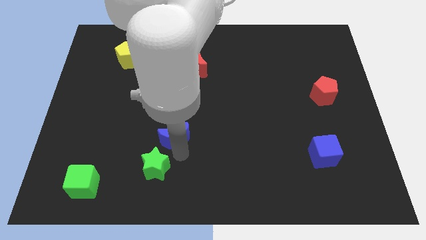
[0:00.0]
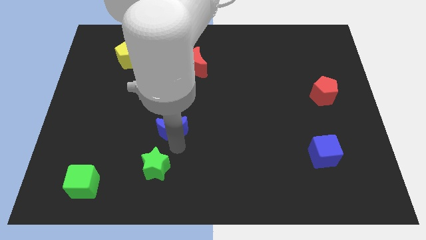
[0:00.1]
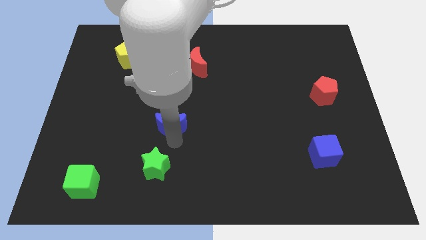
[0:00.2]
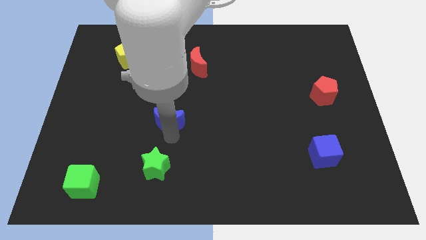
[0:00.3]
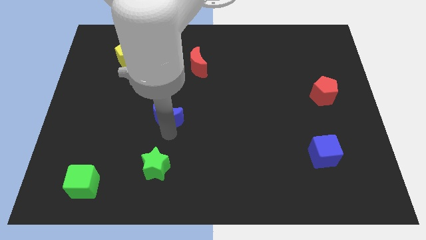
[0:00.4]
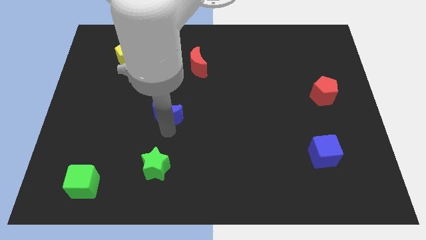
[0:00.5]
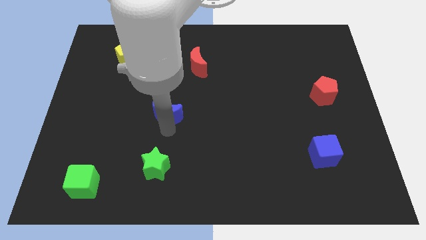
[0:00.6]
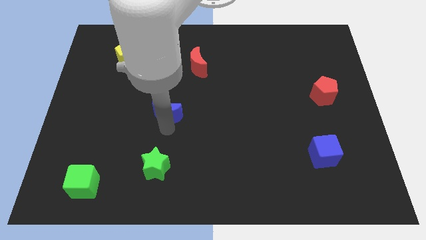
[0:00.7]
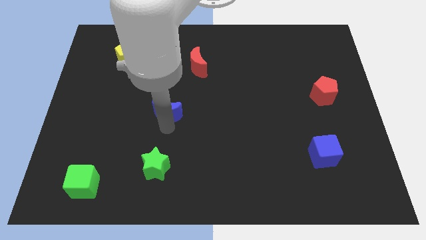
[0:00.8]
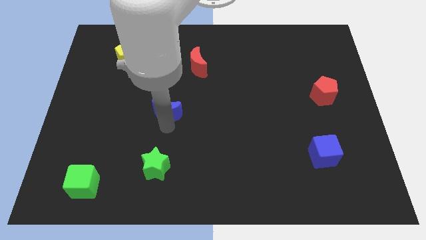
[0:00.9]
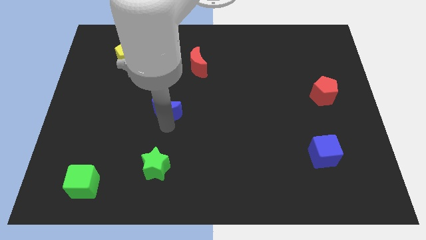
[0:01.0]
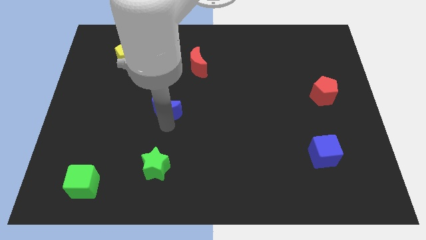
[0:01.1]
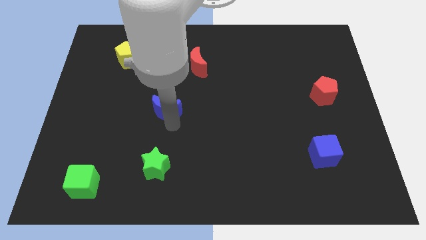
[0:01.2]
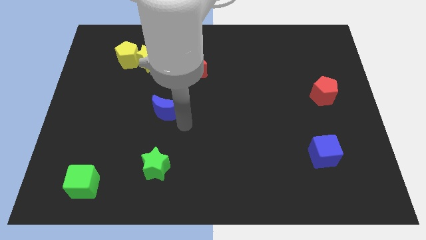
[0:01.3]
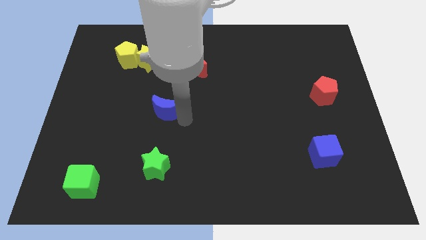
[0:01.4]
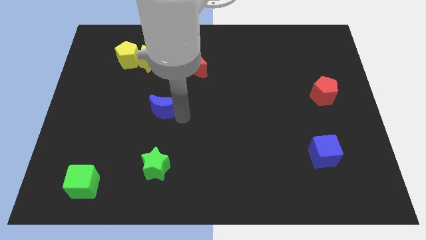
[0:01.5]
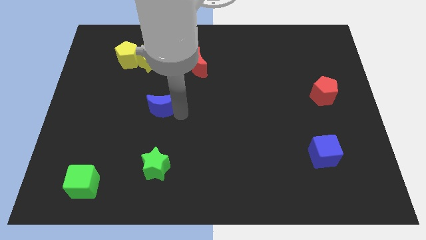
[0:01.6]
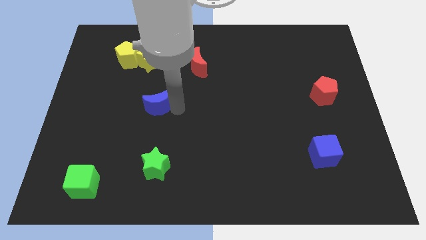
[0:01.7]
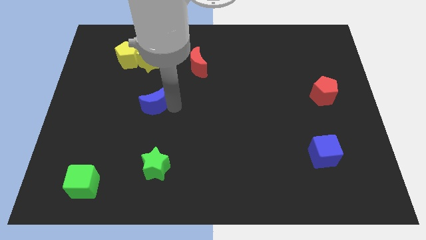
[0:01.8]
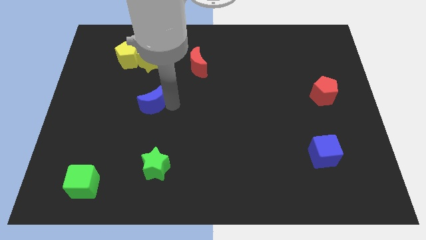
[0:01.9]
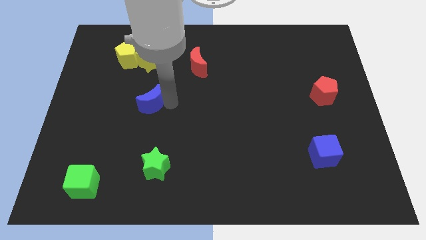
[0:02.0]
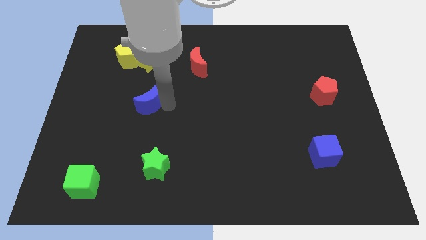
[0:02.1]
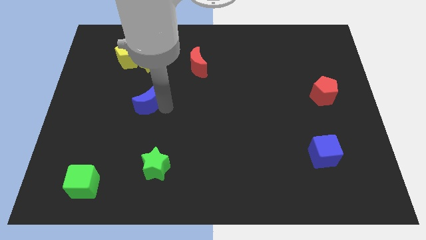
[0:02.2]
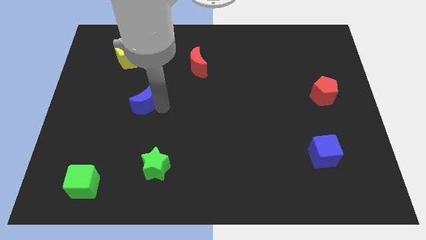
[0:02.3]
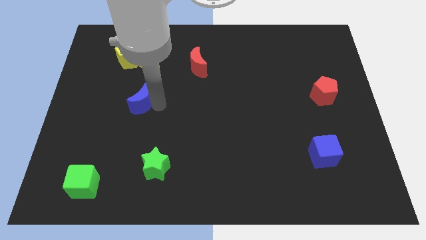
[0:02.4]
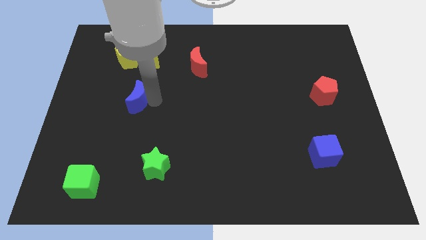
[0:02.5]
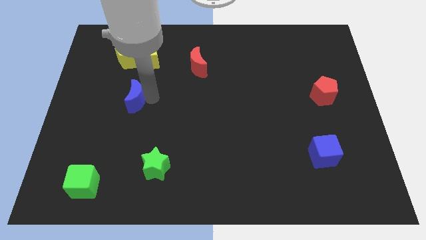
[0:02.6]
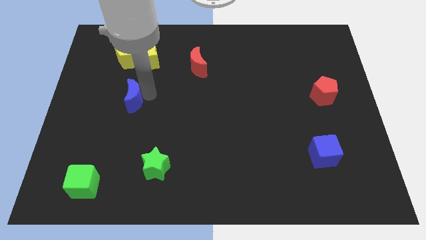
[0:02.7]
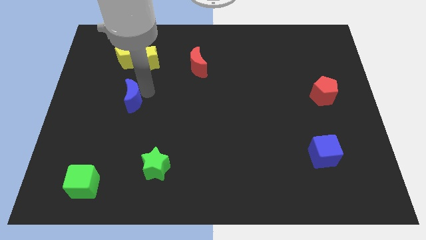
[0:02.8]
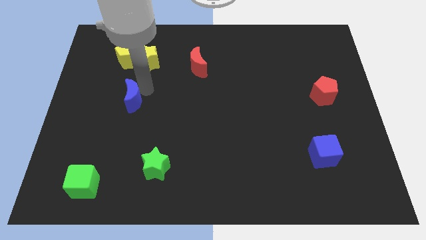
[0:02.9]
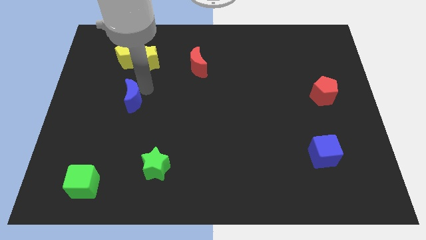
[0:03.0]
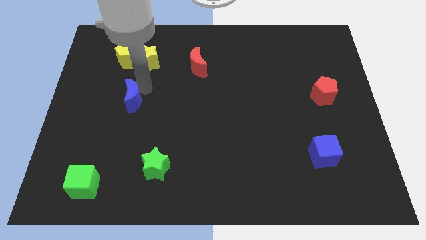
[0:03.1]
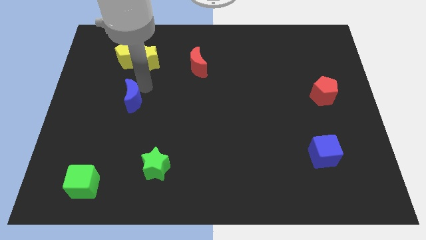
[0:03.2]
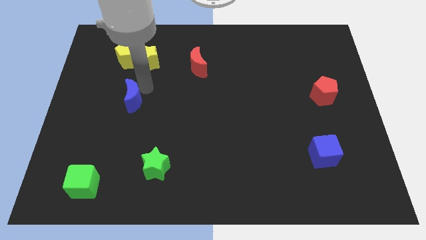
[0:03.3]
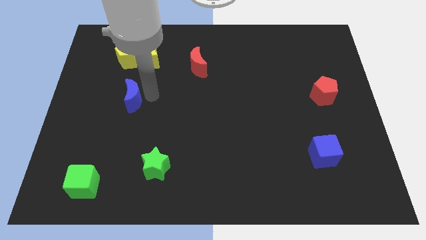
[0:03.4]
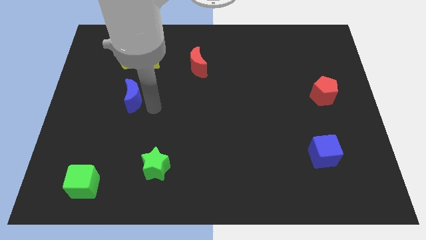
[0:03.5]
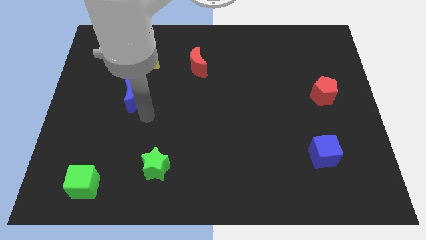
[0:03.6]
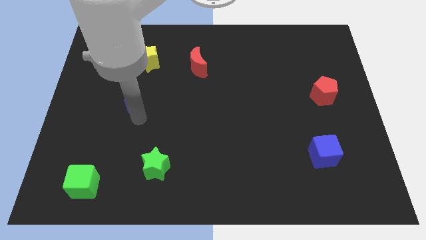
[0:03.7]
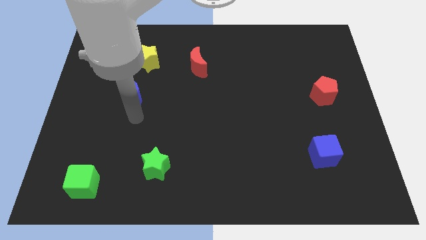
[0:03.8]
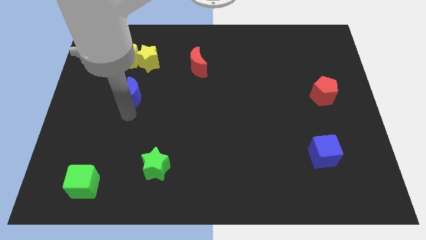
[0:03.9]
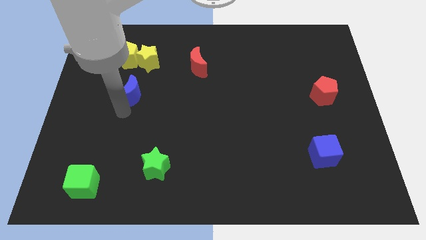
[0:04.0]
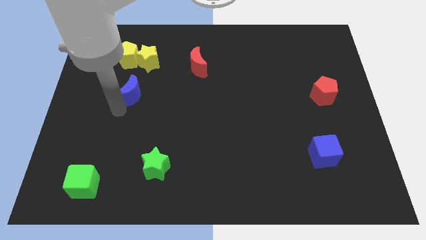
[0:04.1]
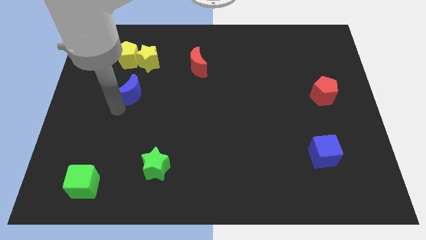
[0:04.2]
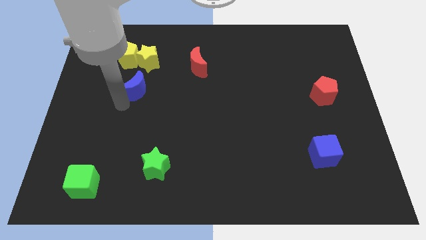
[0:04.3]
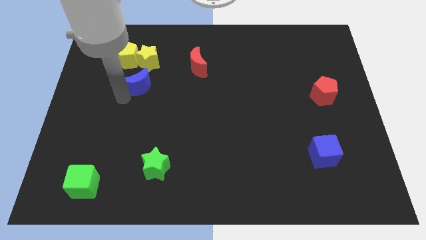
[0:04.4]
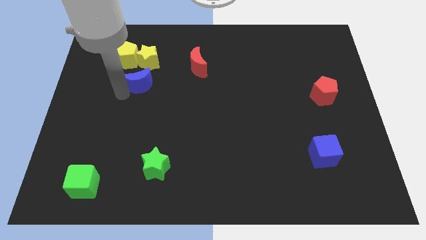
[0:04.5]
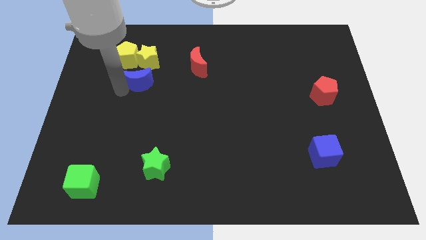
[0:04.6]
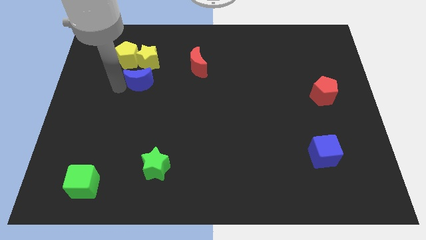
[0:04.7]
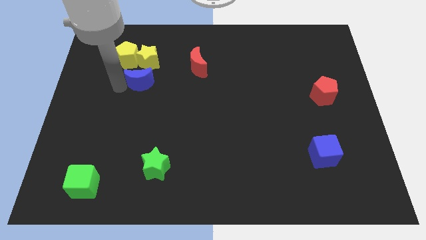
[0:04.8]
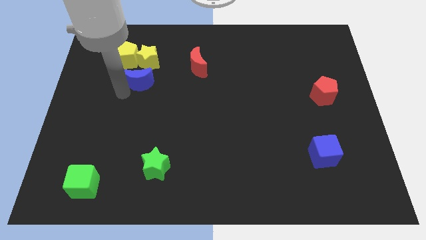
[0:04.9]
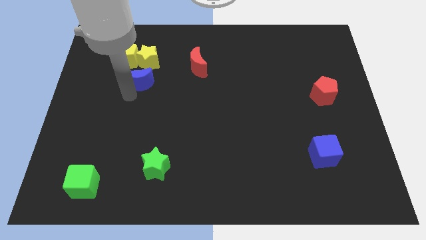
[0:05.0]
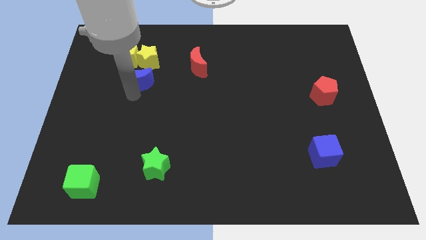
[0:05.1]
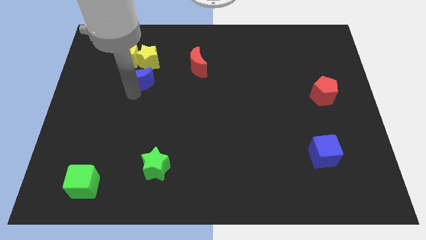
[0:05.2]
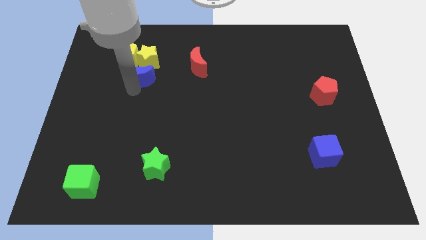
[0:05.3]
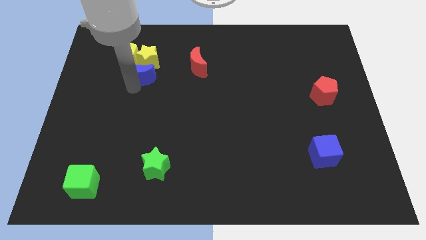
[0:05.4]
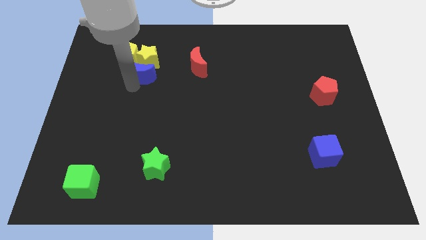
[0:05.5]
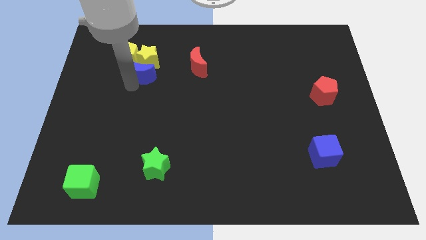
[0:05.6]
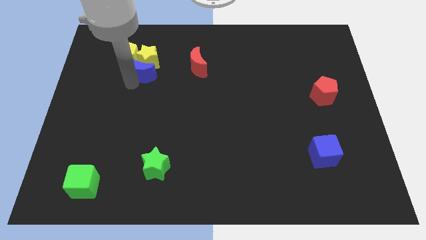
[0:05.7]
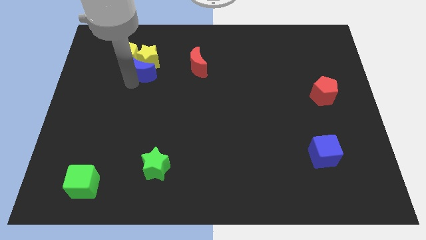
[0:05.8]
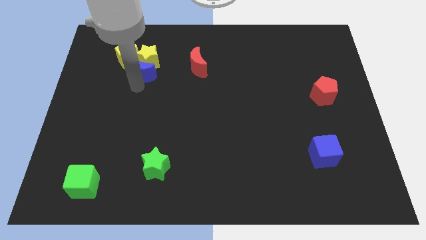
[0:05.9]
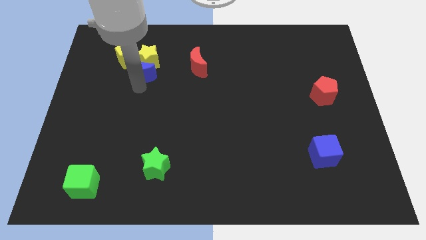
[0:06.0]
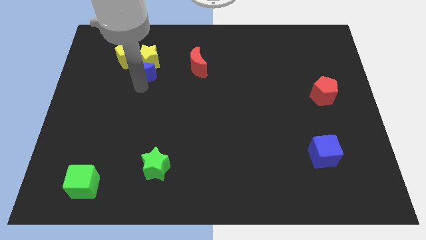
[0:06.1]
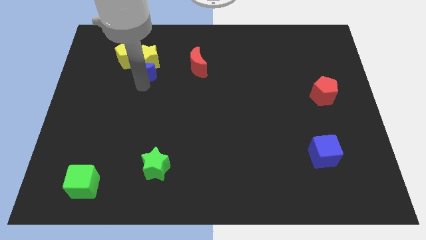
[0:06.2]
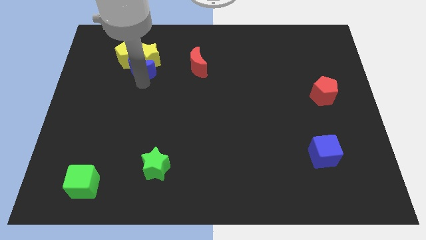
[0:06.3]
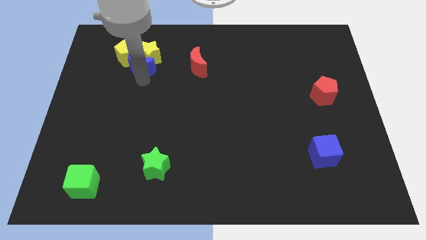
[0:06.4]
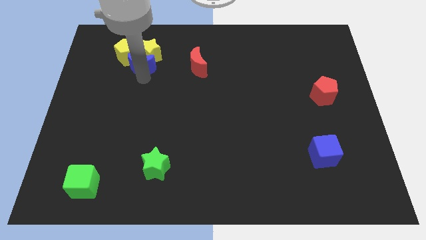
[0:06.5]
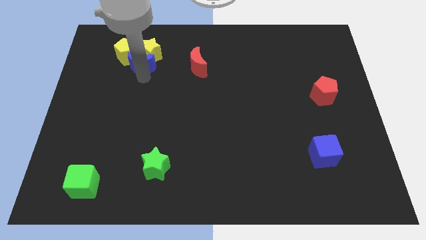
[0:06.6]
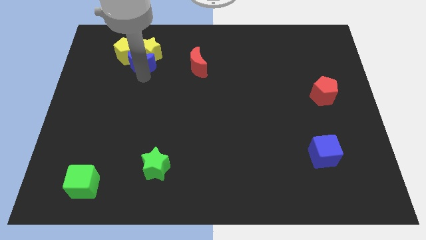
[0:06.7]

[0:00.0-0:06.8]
push the blue crescent into the yellow pentagon and yellow star

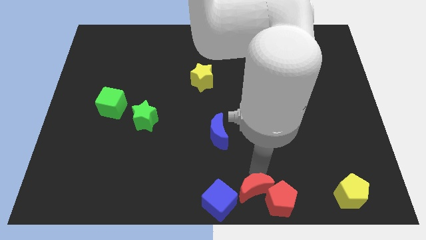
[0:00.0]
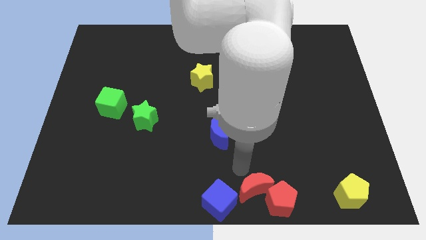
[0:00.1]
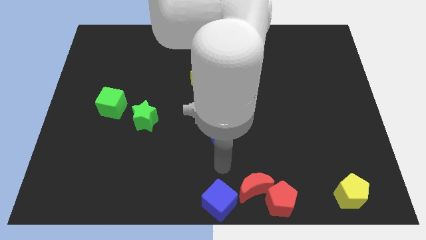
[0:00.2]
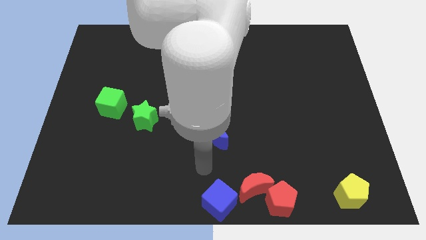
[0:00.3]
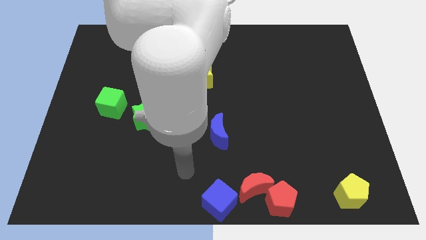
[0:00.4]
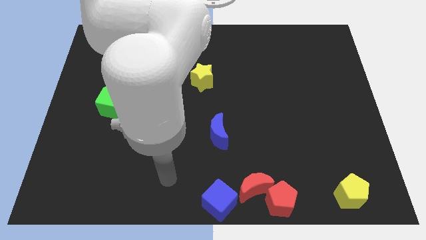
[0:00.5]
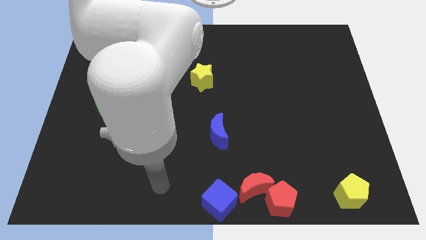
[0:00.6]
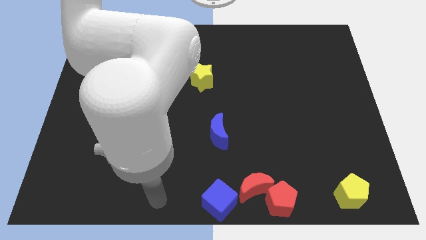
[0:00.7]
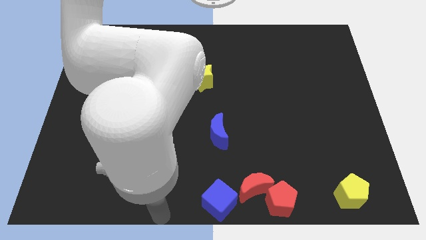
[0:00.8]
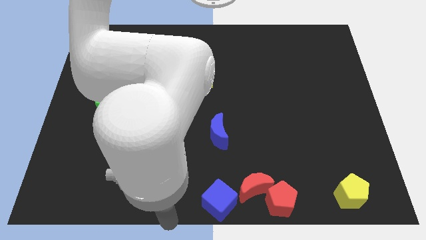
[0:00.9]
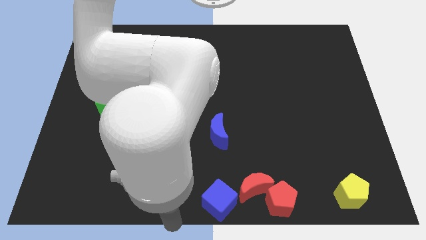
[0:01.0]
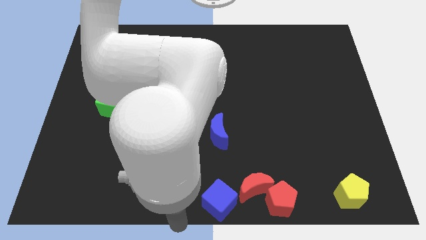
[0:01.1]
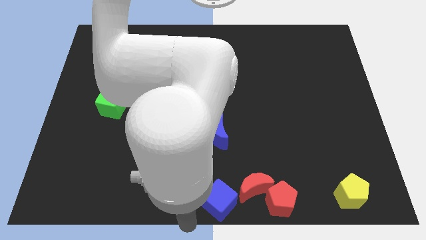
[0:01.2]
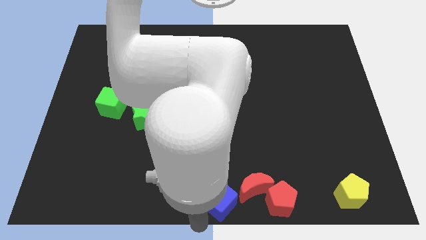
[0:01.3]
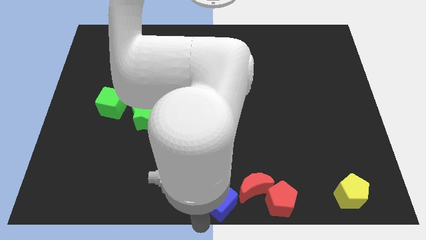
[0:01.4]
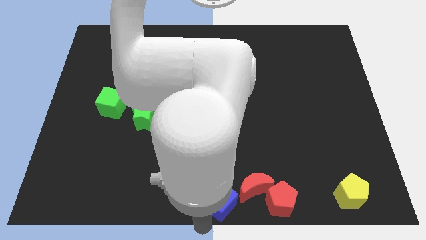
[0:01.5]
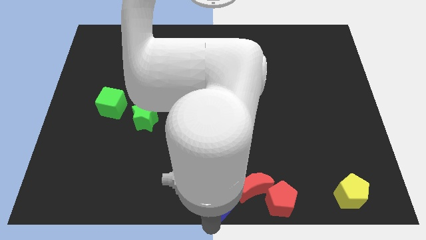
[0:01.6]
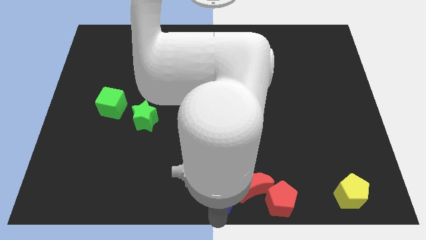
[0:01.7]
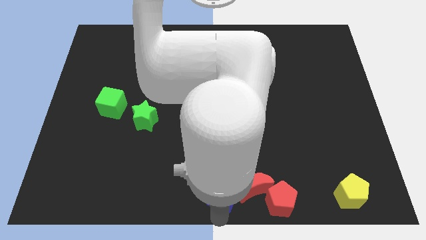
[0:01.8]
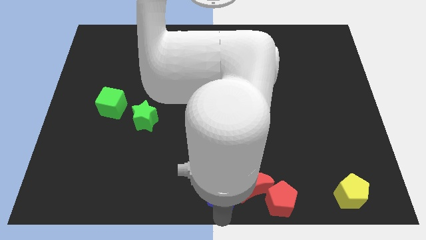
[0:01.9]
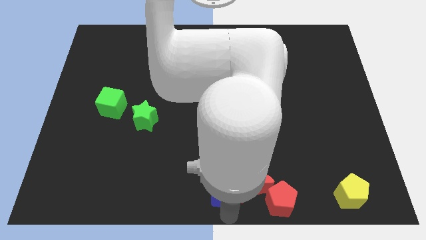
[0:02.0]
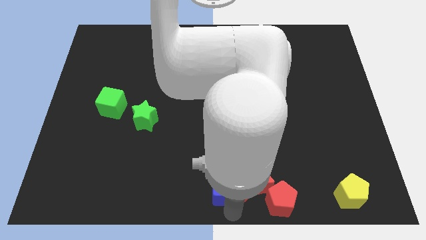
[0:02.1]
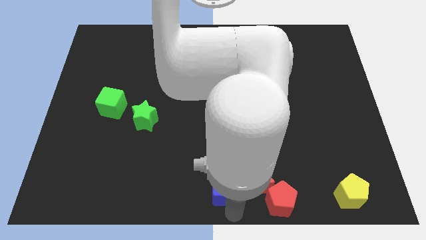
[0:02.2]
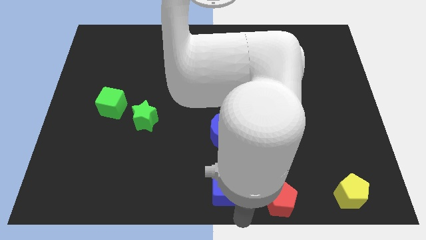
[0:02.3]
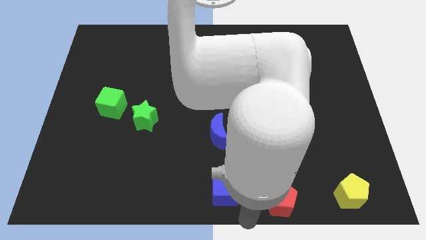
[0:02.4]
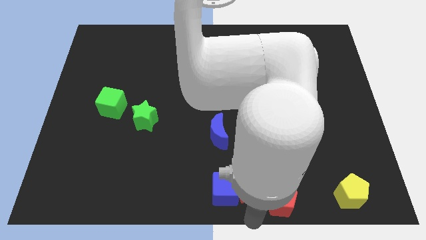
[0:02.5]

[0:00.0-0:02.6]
point your arm at the bottom of the red crescent
